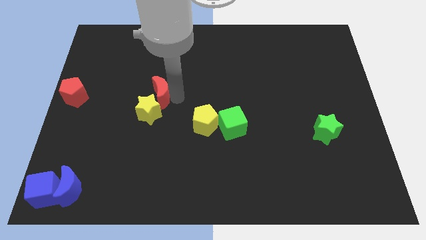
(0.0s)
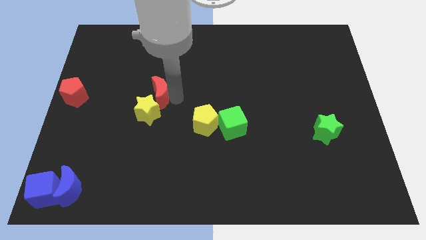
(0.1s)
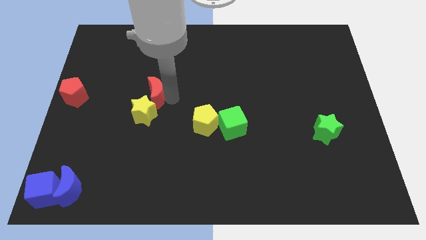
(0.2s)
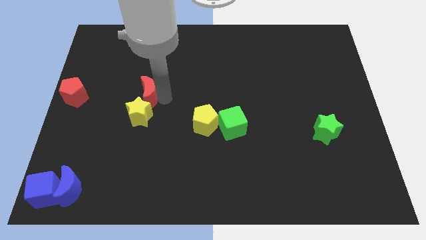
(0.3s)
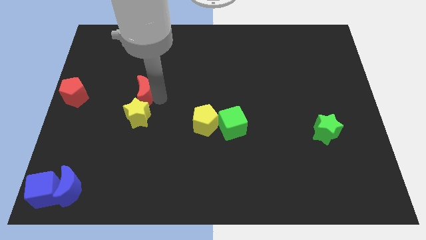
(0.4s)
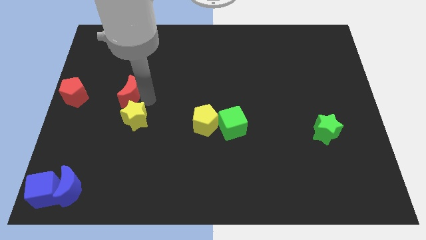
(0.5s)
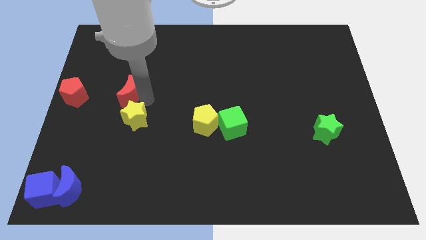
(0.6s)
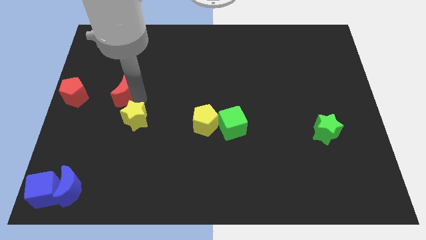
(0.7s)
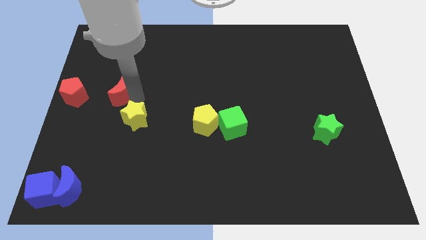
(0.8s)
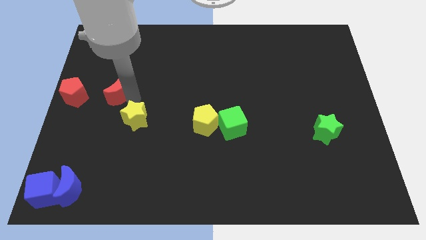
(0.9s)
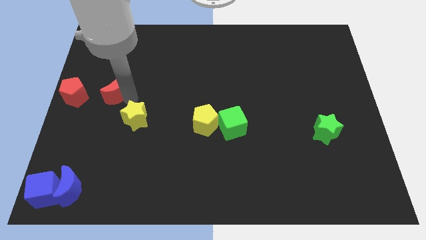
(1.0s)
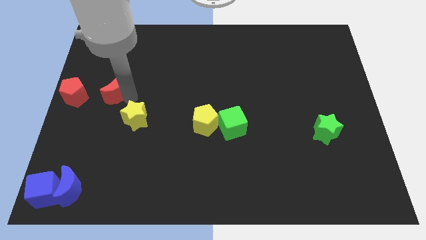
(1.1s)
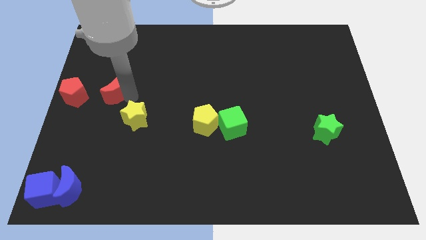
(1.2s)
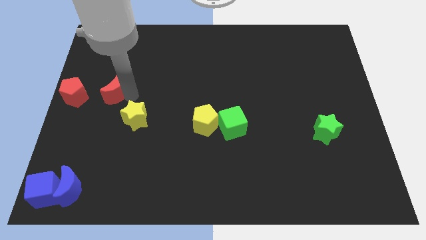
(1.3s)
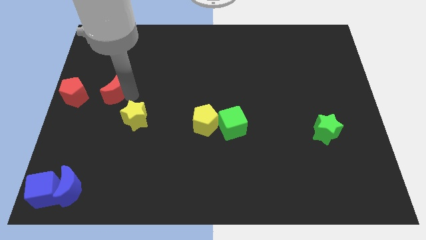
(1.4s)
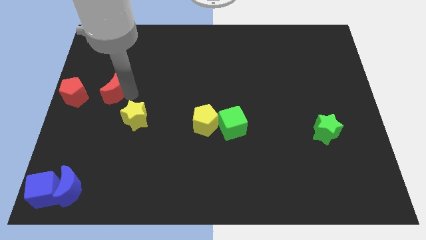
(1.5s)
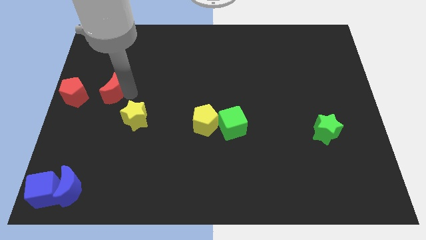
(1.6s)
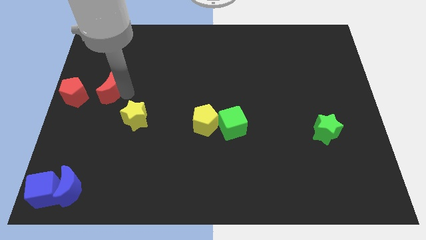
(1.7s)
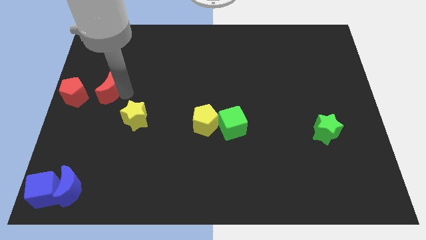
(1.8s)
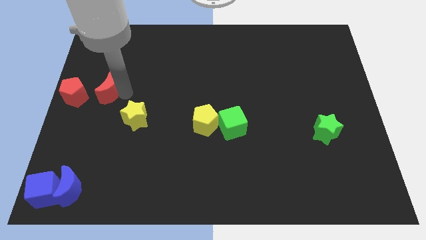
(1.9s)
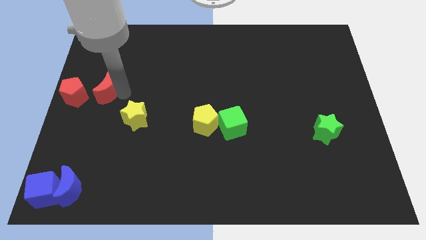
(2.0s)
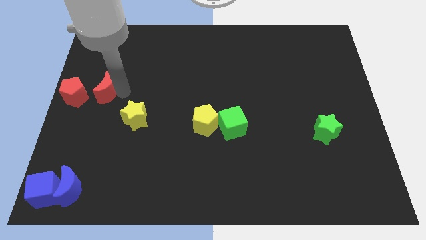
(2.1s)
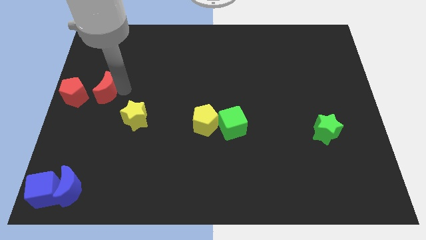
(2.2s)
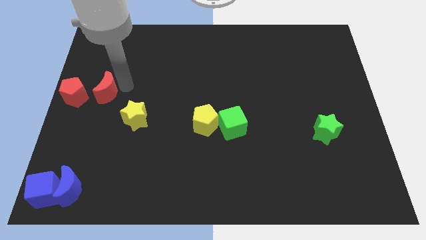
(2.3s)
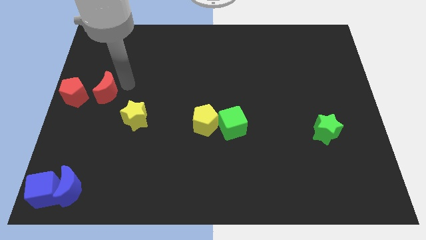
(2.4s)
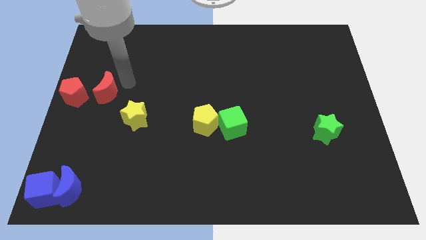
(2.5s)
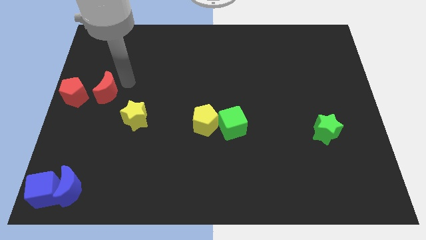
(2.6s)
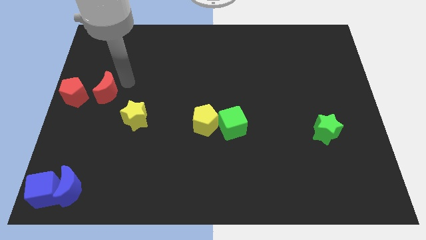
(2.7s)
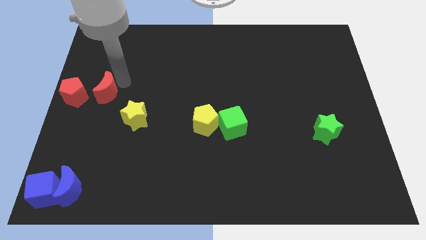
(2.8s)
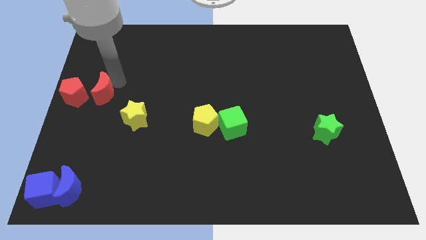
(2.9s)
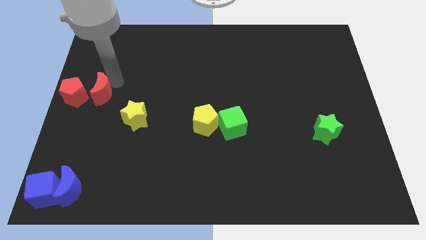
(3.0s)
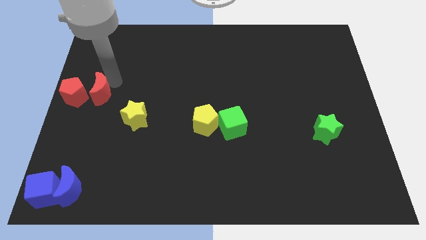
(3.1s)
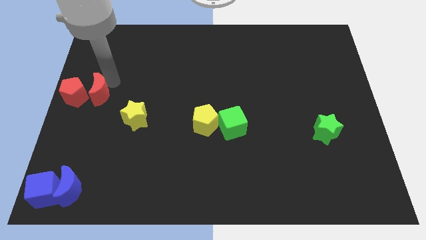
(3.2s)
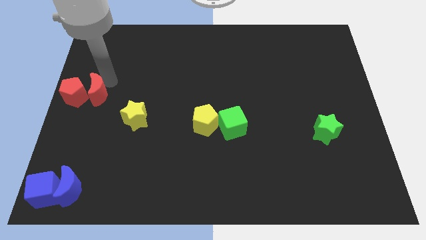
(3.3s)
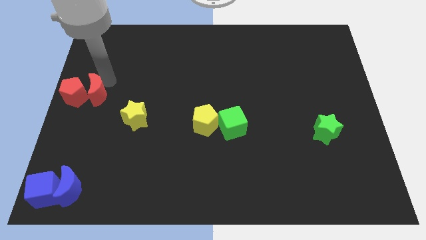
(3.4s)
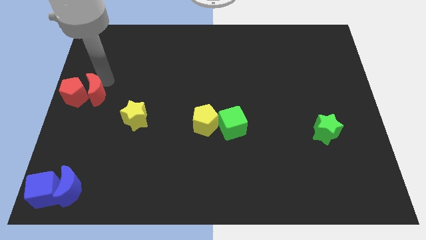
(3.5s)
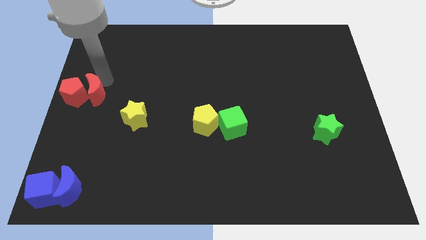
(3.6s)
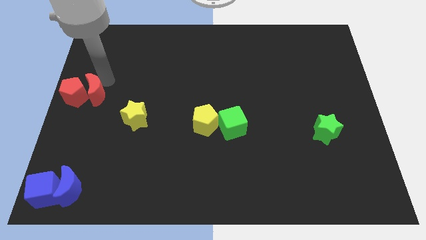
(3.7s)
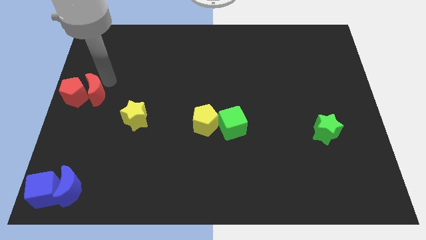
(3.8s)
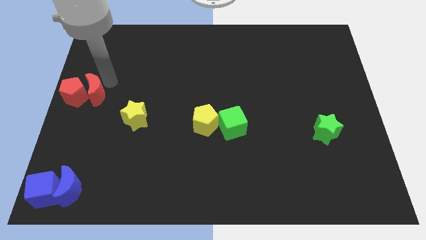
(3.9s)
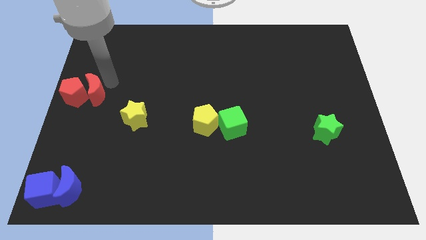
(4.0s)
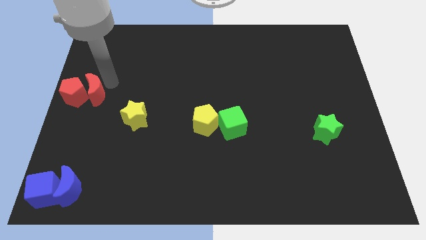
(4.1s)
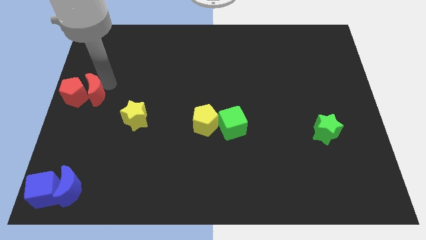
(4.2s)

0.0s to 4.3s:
move the red moon into the red pentagon

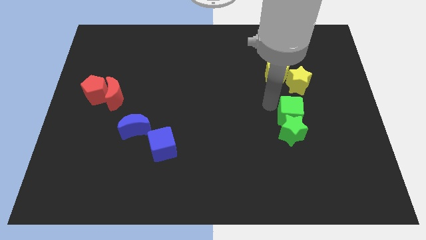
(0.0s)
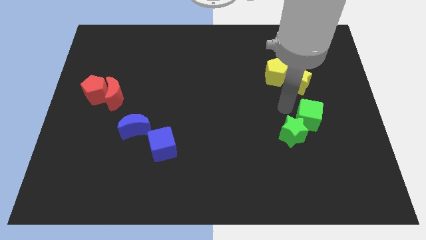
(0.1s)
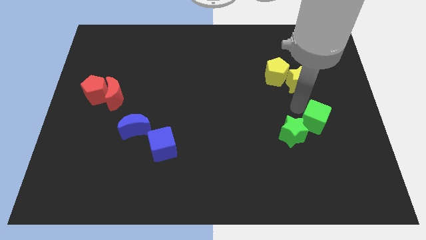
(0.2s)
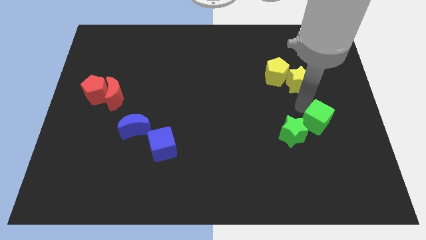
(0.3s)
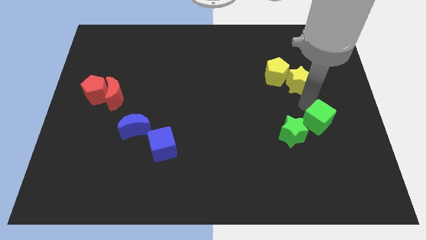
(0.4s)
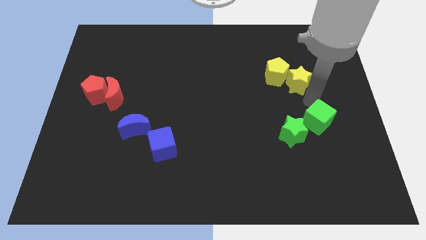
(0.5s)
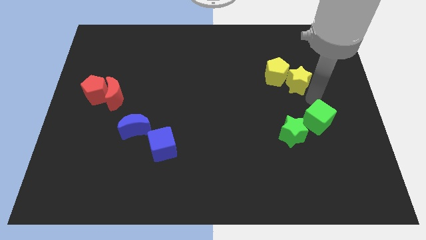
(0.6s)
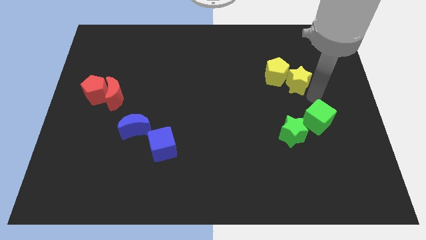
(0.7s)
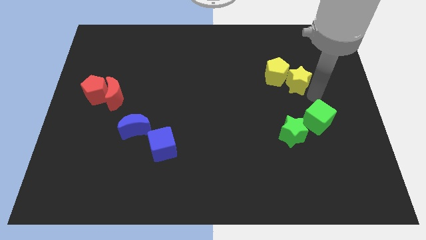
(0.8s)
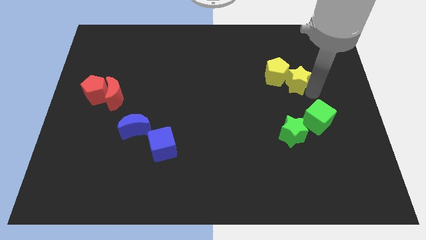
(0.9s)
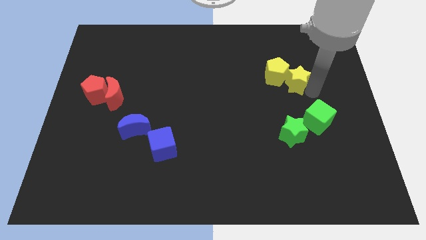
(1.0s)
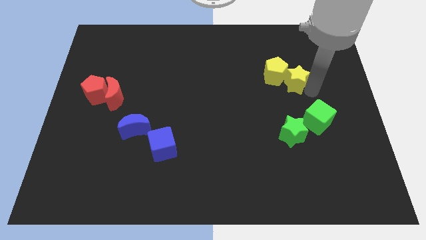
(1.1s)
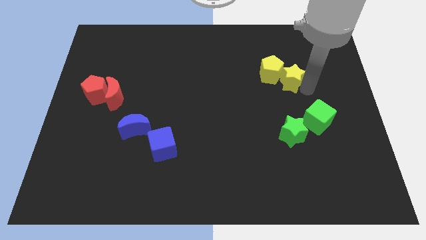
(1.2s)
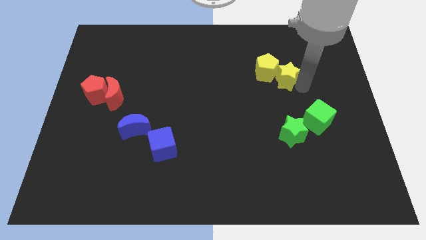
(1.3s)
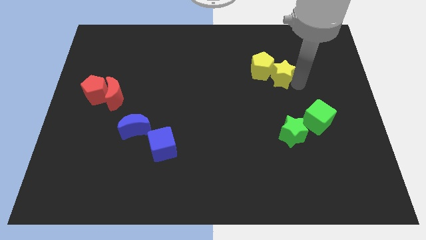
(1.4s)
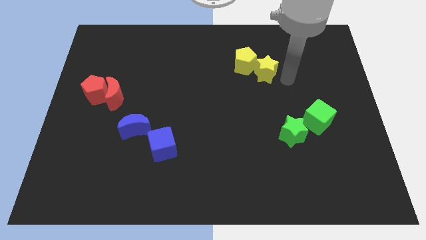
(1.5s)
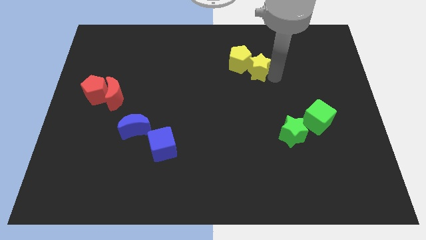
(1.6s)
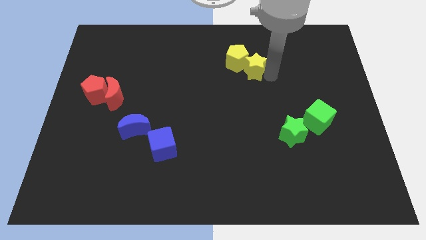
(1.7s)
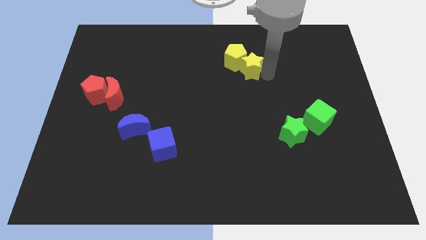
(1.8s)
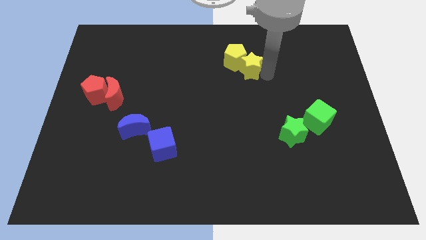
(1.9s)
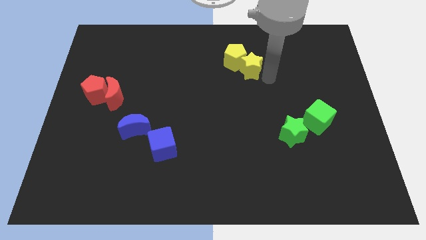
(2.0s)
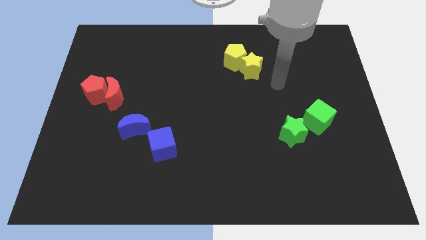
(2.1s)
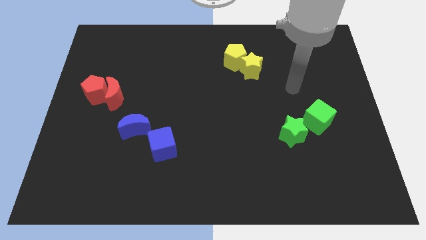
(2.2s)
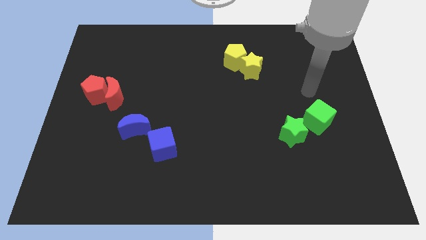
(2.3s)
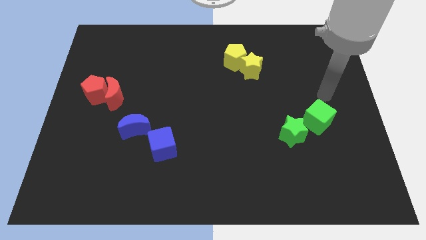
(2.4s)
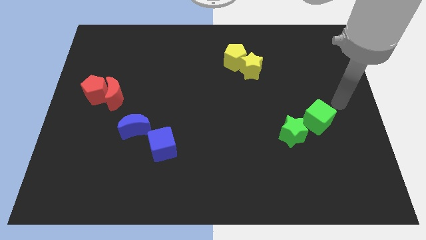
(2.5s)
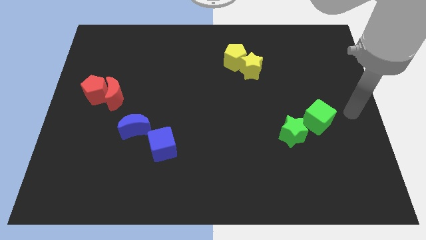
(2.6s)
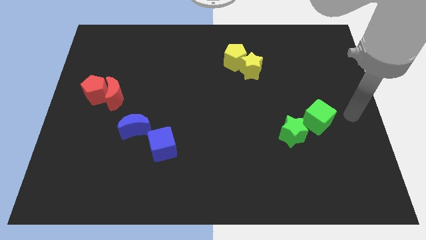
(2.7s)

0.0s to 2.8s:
push the yellow star along with the yellow pentagon towards the top centre of the board

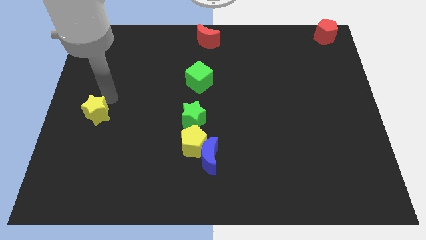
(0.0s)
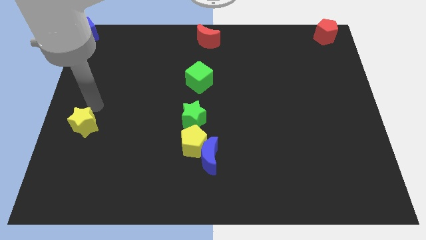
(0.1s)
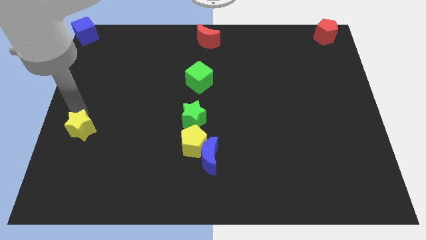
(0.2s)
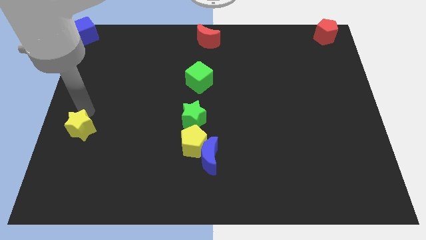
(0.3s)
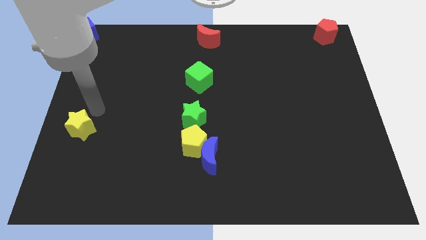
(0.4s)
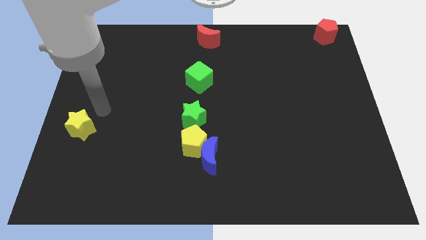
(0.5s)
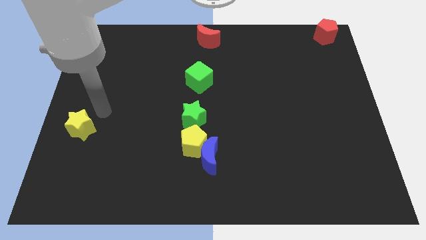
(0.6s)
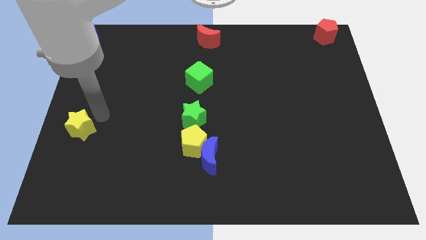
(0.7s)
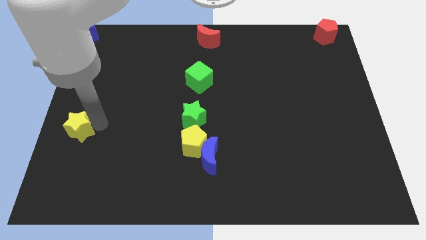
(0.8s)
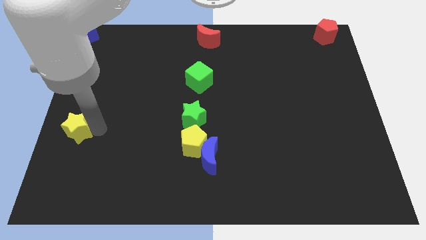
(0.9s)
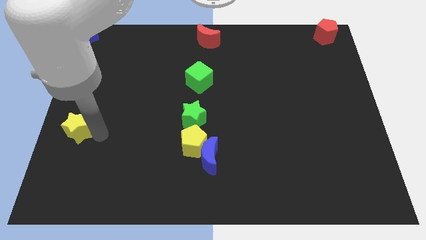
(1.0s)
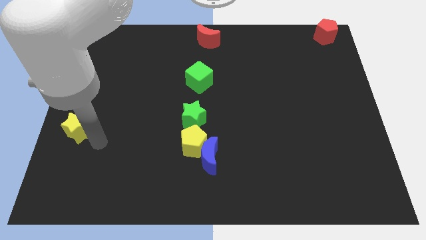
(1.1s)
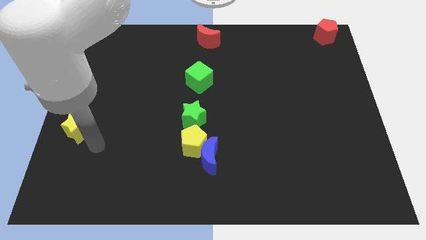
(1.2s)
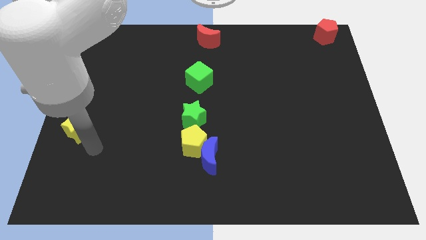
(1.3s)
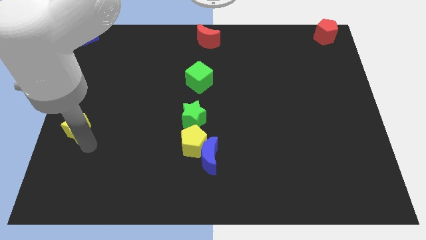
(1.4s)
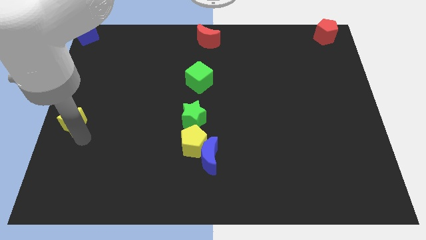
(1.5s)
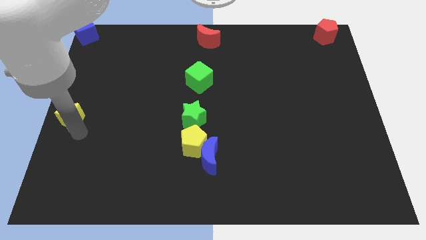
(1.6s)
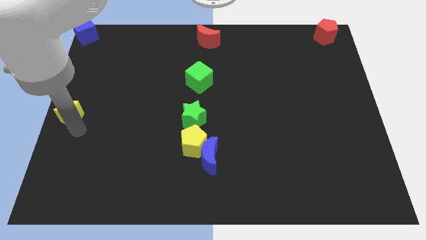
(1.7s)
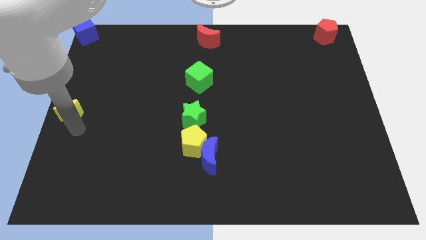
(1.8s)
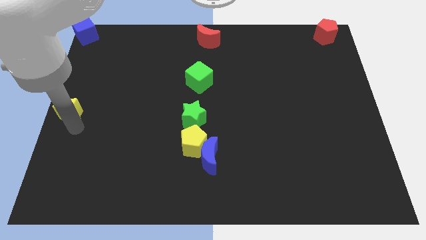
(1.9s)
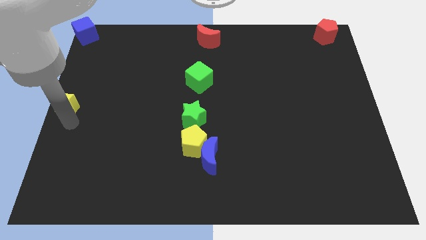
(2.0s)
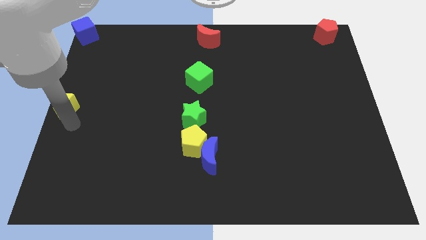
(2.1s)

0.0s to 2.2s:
place the yellow star at the center left side of the board
